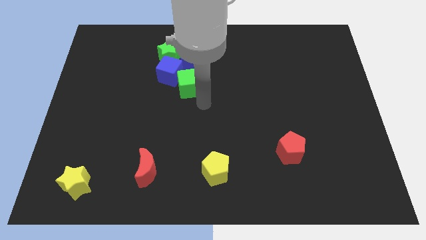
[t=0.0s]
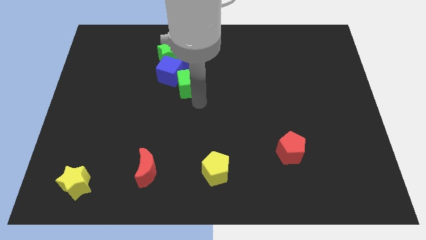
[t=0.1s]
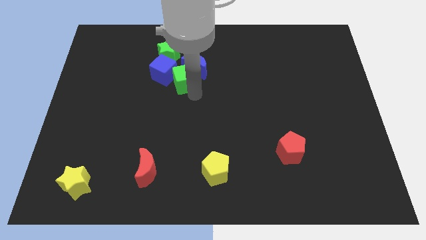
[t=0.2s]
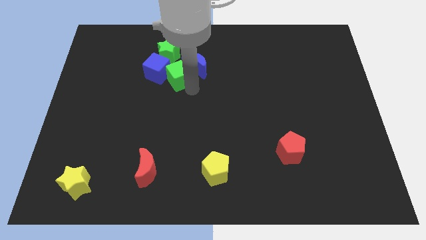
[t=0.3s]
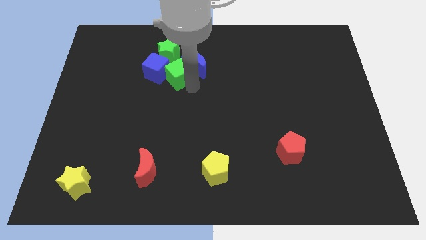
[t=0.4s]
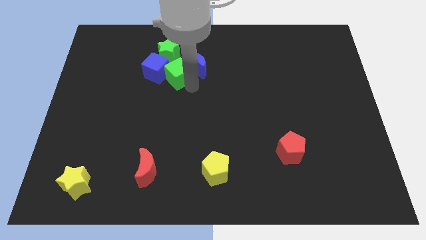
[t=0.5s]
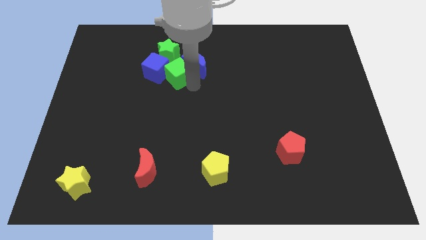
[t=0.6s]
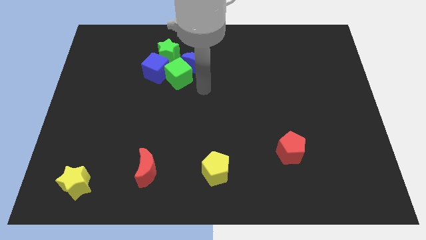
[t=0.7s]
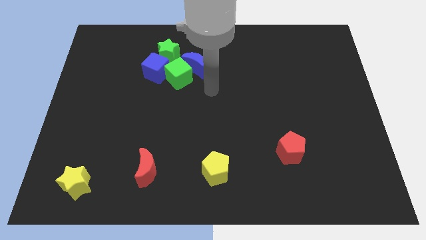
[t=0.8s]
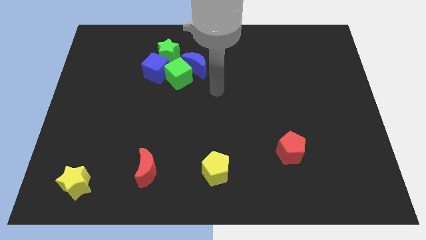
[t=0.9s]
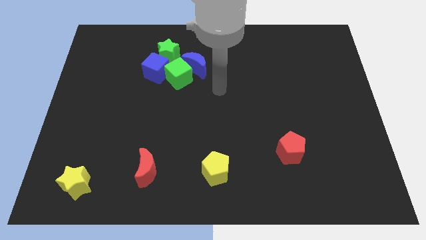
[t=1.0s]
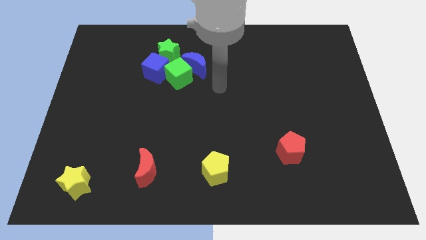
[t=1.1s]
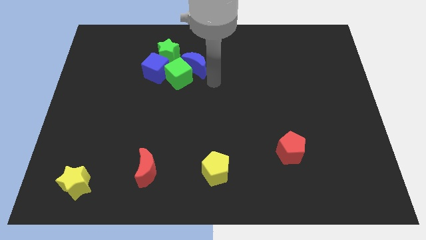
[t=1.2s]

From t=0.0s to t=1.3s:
push the green cube into the blue blocks

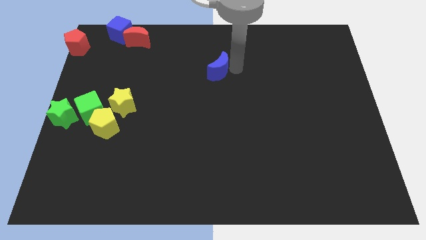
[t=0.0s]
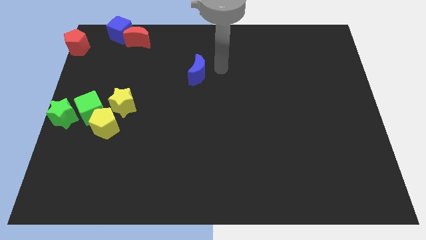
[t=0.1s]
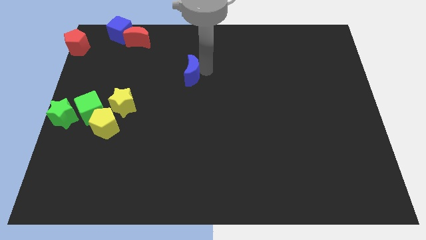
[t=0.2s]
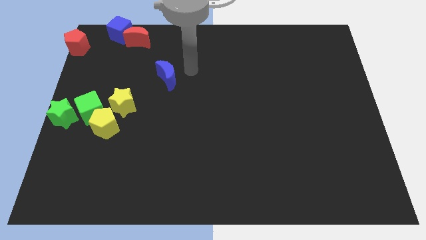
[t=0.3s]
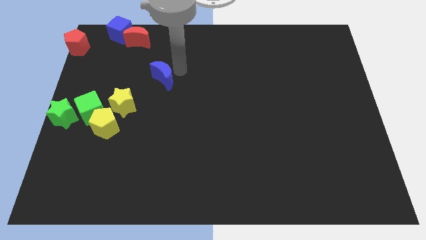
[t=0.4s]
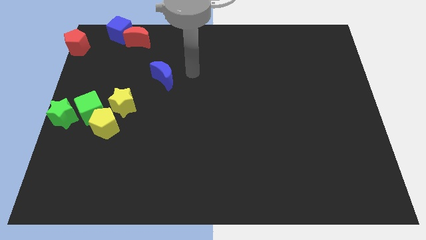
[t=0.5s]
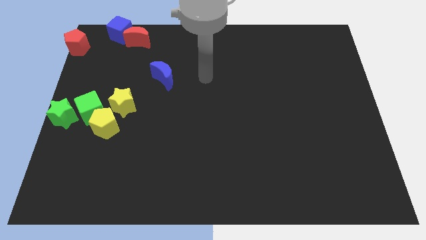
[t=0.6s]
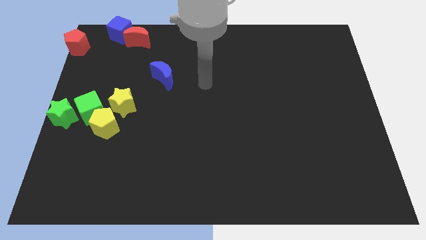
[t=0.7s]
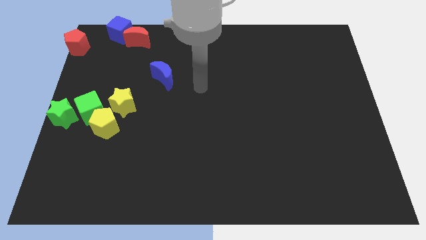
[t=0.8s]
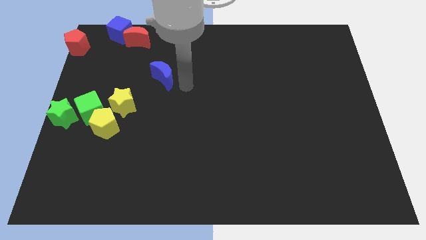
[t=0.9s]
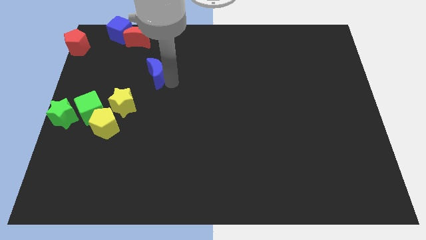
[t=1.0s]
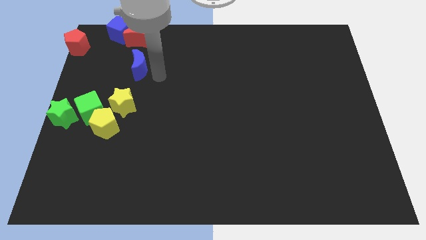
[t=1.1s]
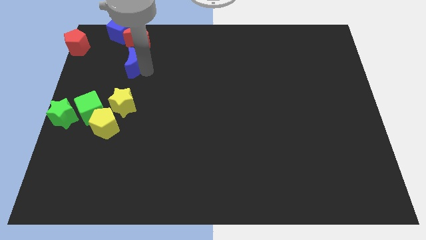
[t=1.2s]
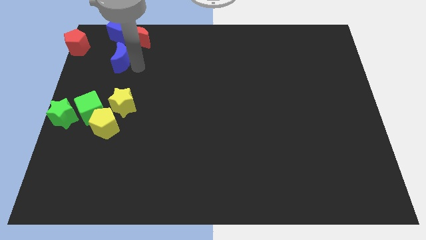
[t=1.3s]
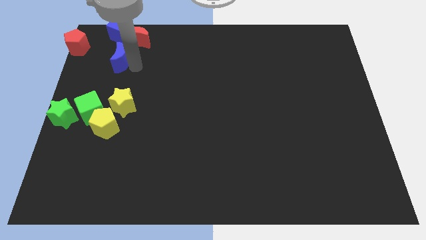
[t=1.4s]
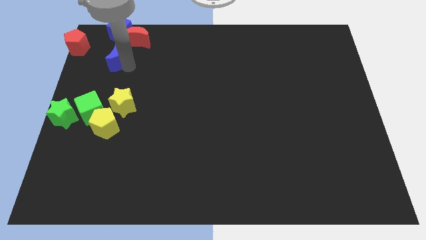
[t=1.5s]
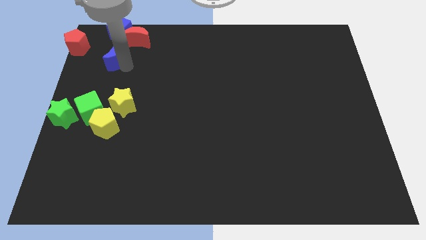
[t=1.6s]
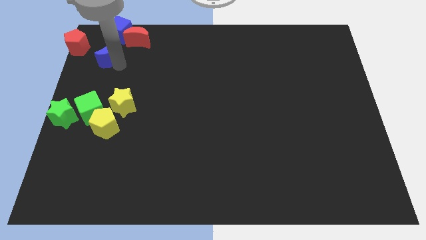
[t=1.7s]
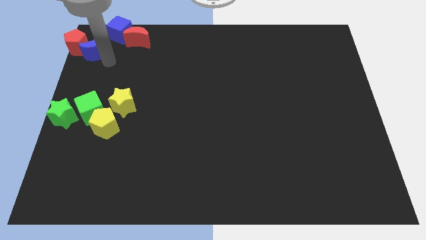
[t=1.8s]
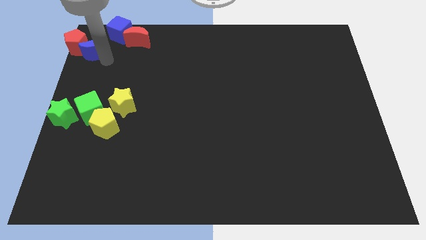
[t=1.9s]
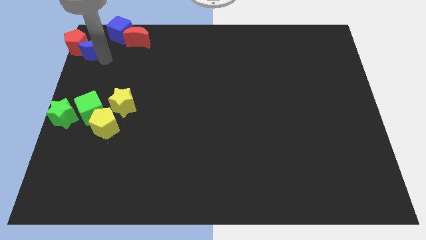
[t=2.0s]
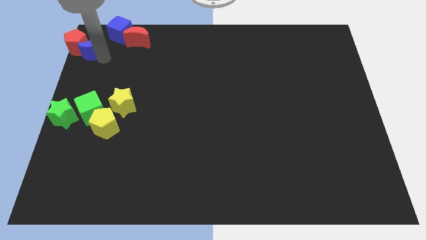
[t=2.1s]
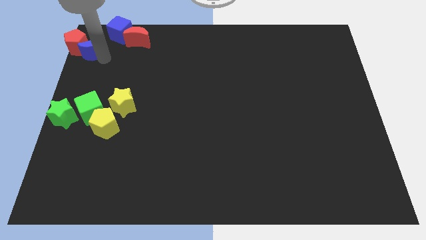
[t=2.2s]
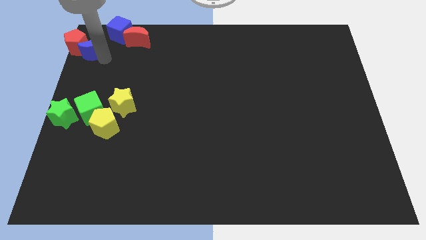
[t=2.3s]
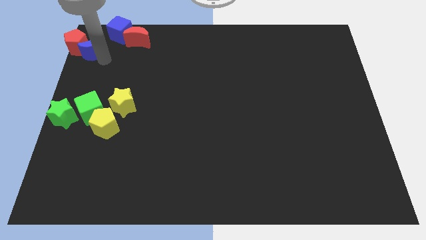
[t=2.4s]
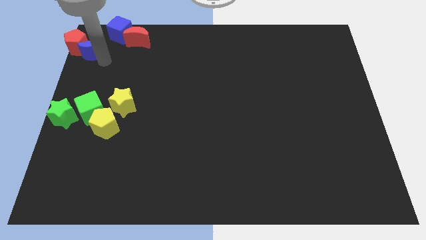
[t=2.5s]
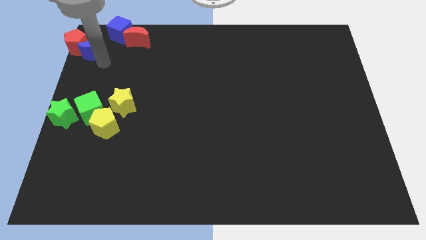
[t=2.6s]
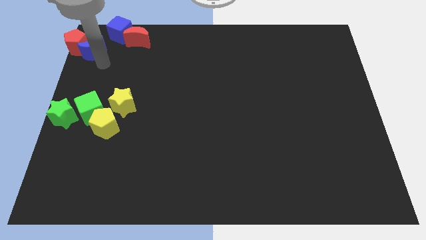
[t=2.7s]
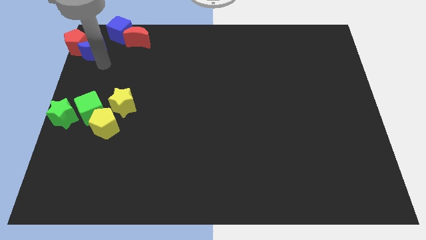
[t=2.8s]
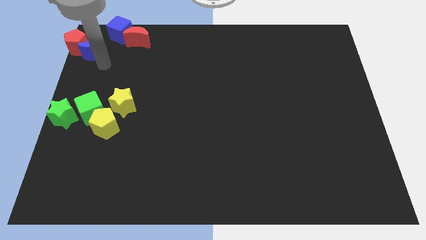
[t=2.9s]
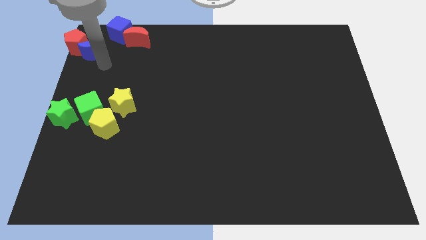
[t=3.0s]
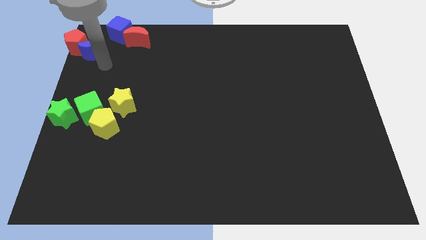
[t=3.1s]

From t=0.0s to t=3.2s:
place the blue moon into the red pentagon

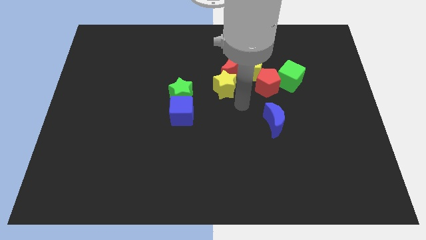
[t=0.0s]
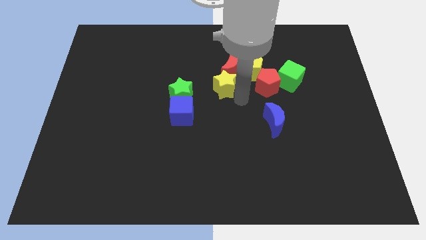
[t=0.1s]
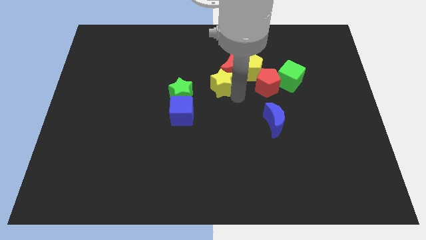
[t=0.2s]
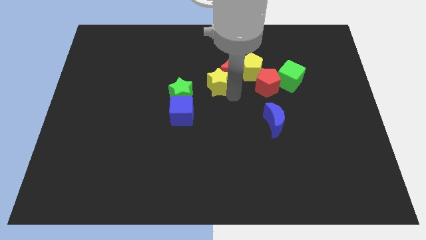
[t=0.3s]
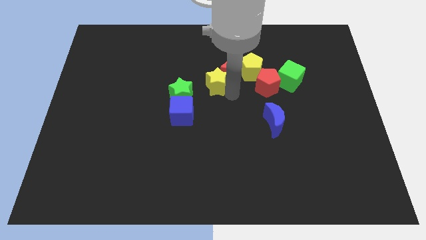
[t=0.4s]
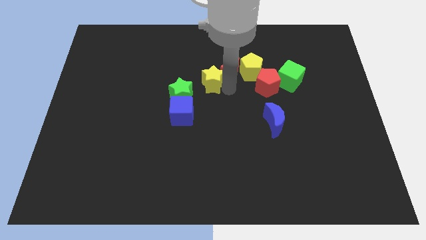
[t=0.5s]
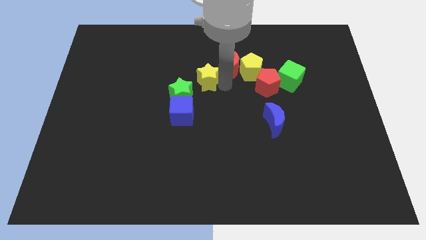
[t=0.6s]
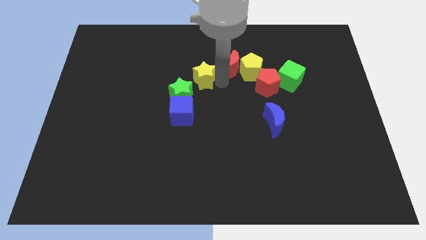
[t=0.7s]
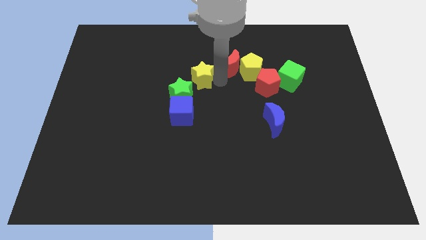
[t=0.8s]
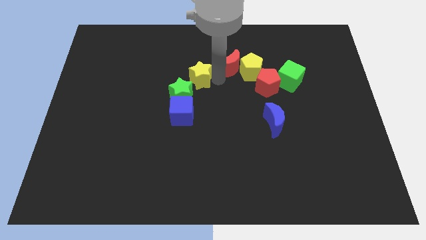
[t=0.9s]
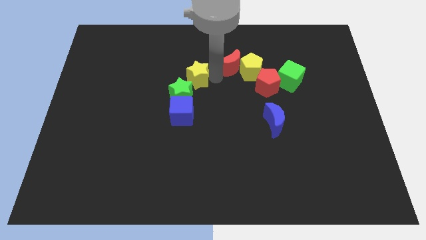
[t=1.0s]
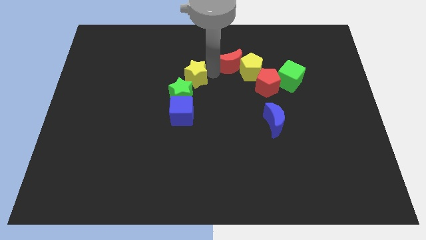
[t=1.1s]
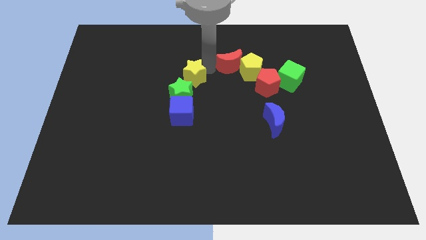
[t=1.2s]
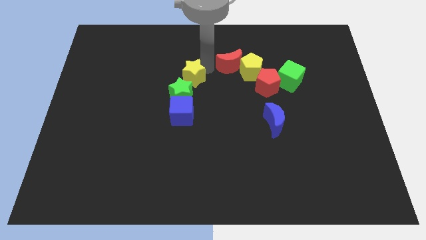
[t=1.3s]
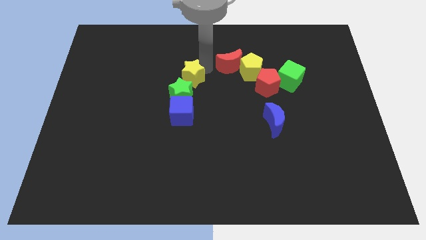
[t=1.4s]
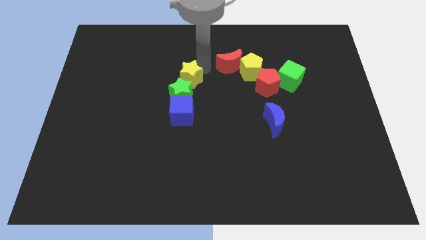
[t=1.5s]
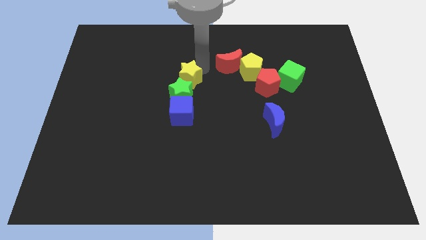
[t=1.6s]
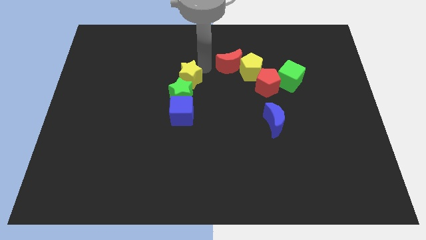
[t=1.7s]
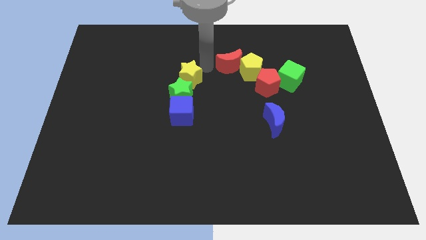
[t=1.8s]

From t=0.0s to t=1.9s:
separate the yellow star and the red pentagon

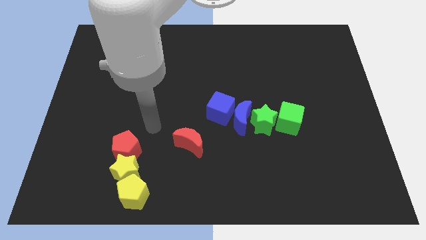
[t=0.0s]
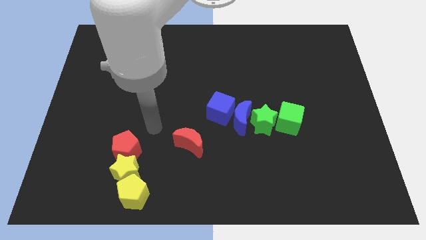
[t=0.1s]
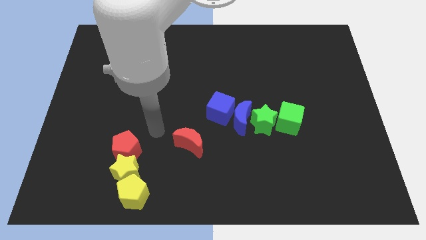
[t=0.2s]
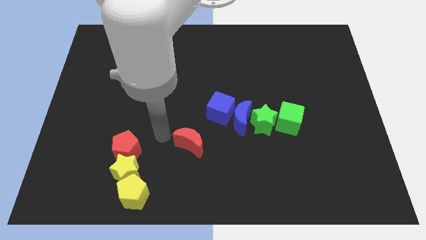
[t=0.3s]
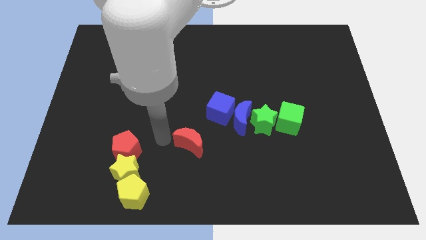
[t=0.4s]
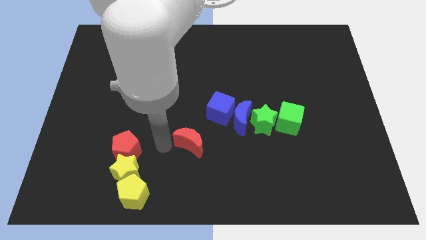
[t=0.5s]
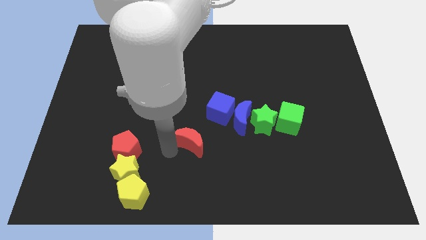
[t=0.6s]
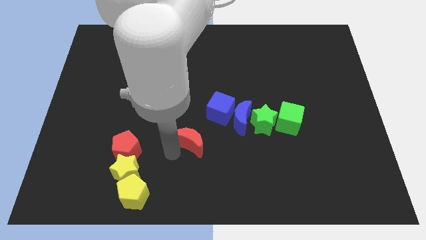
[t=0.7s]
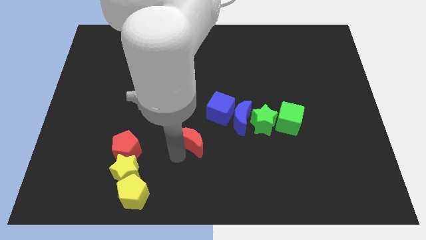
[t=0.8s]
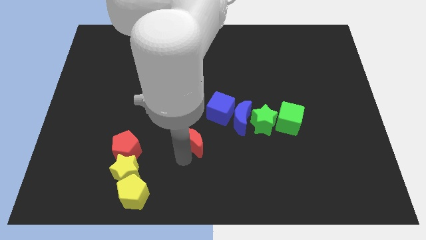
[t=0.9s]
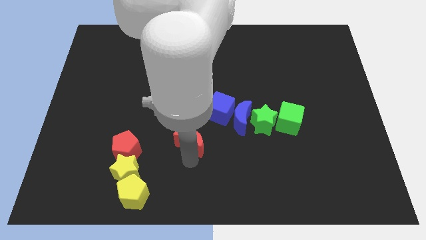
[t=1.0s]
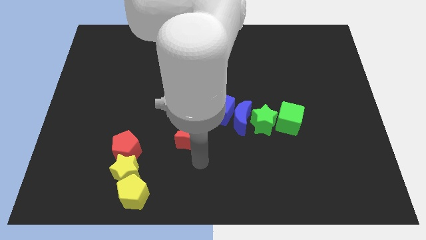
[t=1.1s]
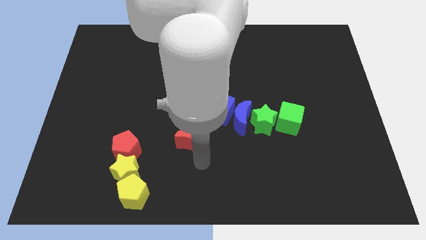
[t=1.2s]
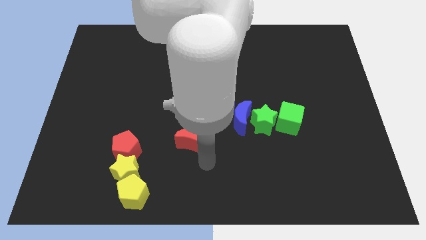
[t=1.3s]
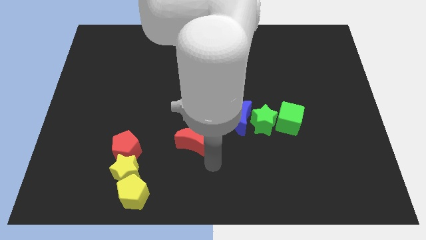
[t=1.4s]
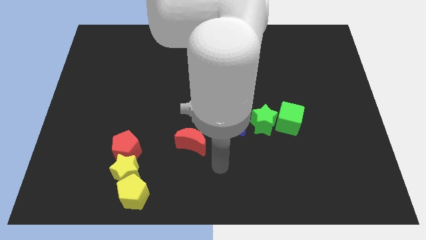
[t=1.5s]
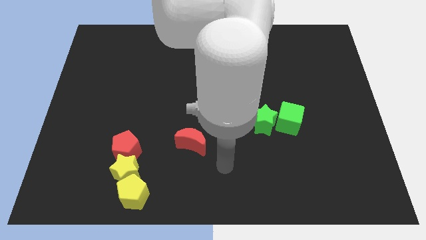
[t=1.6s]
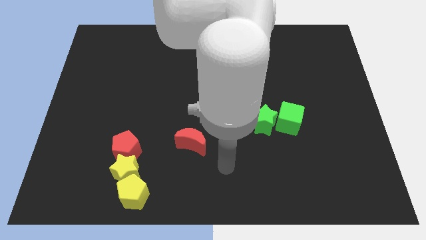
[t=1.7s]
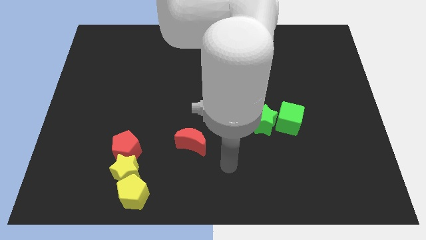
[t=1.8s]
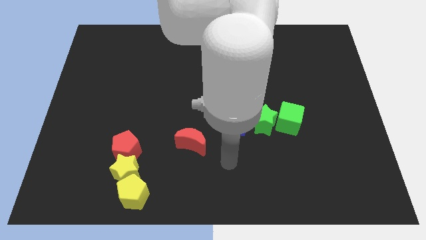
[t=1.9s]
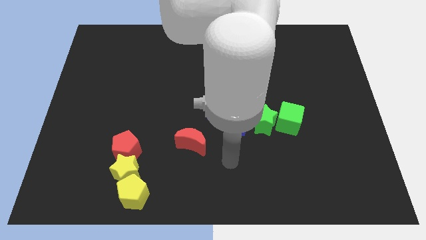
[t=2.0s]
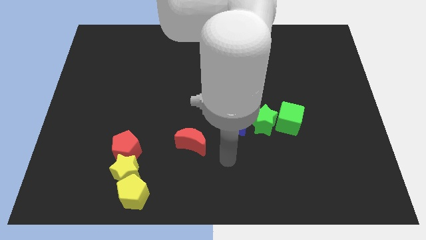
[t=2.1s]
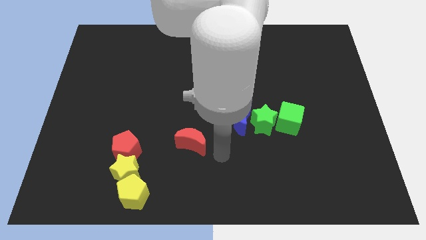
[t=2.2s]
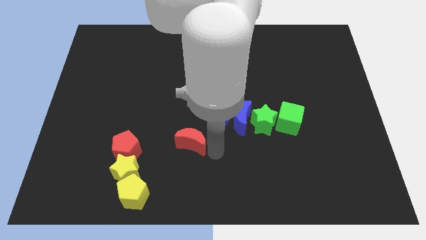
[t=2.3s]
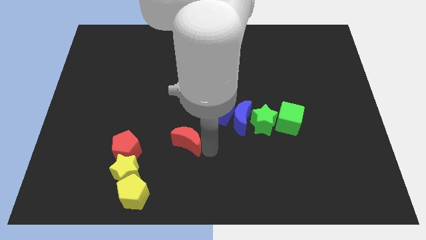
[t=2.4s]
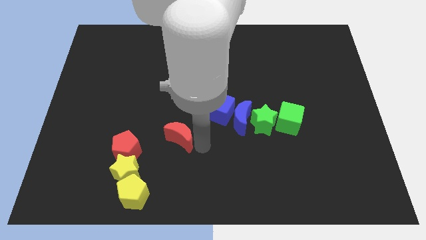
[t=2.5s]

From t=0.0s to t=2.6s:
move your arm into the red crescent
